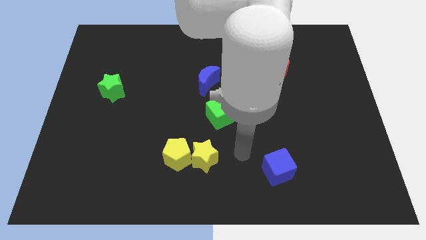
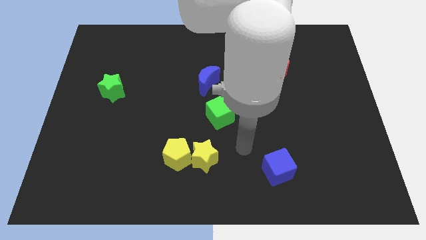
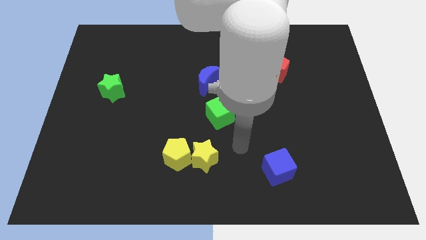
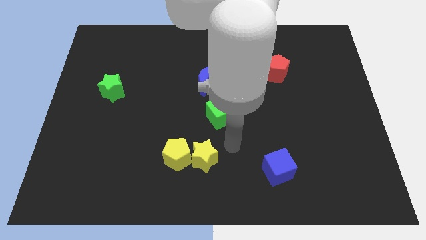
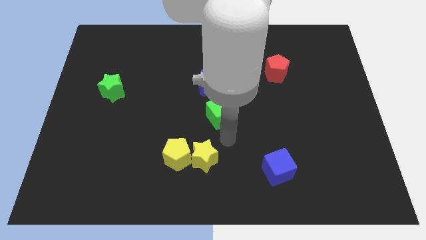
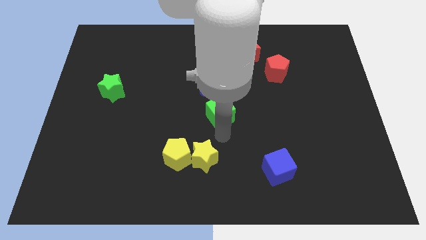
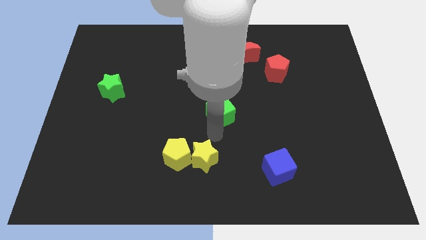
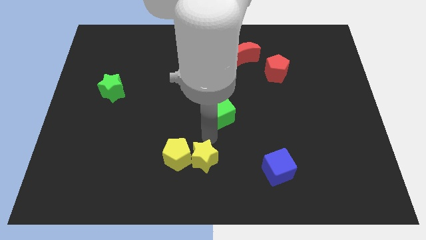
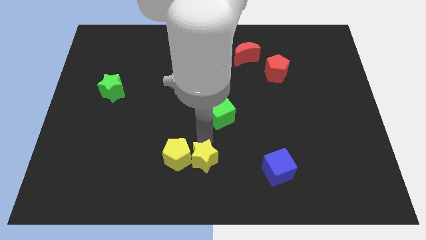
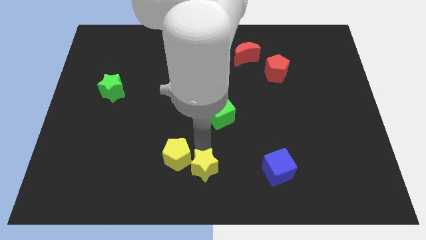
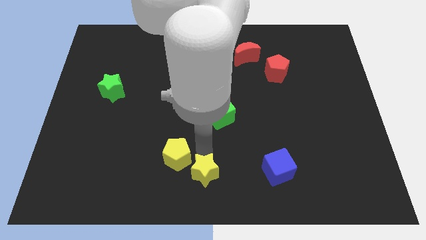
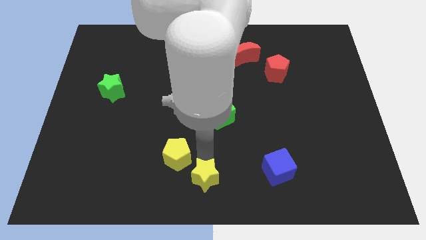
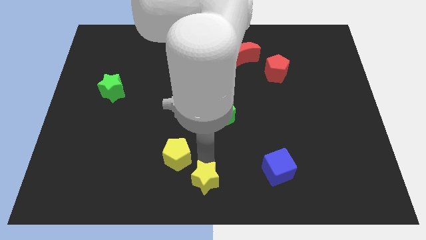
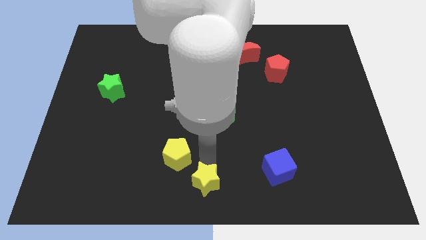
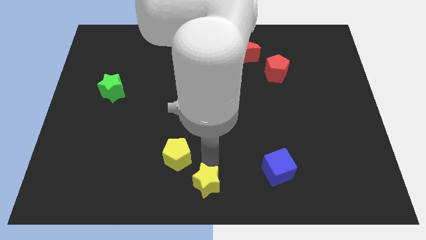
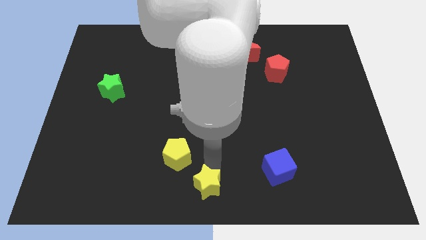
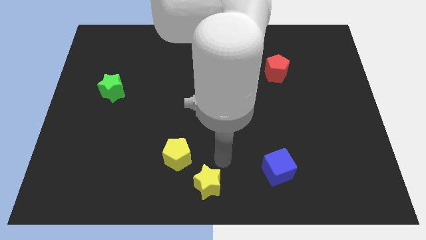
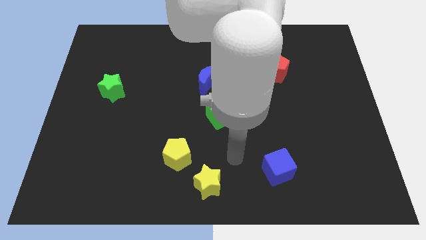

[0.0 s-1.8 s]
push the yellow star slightly to bottom

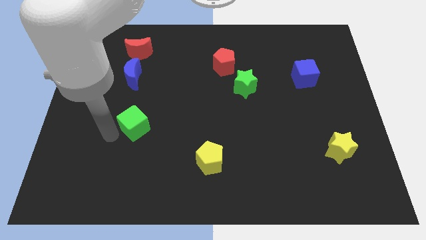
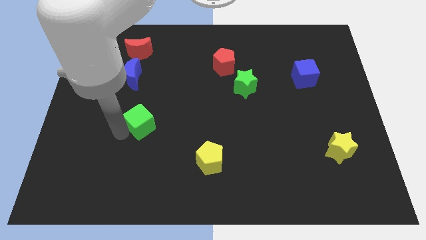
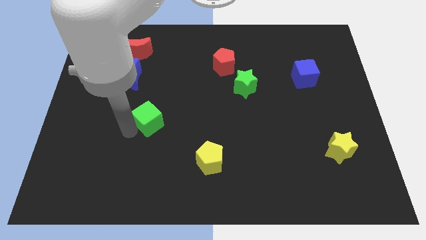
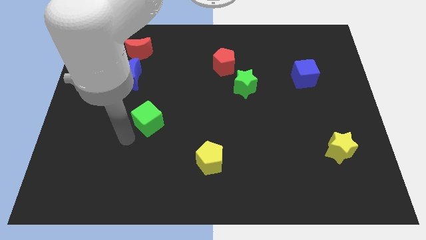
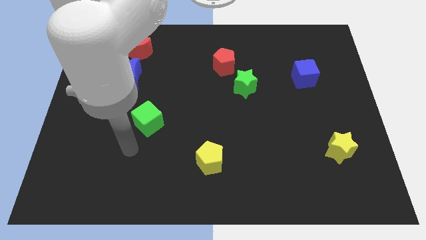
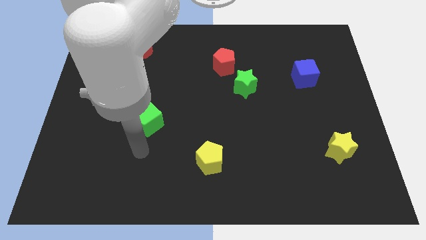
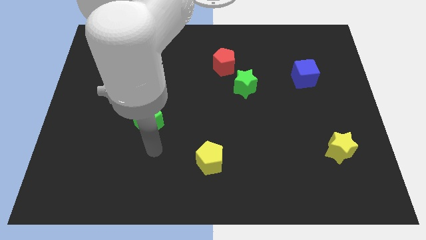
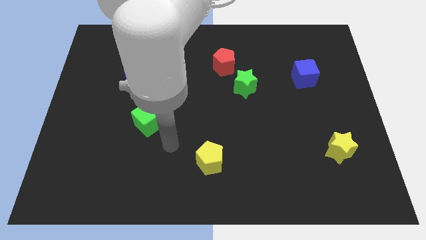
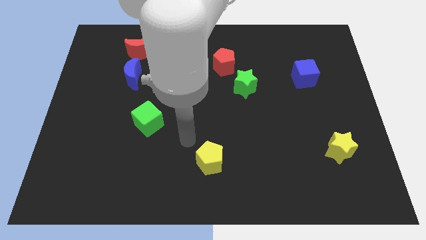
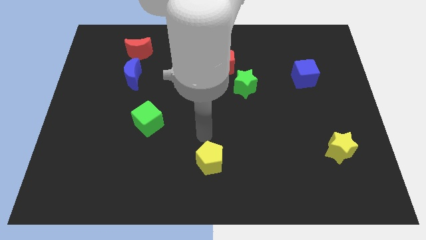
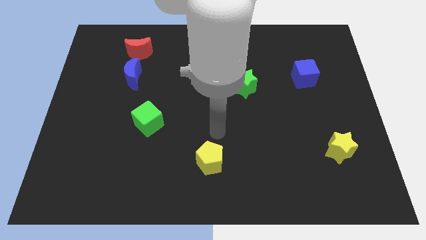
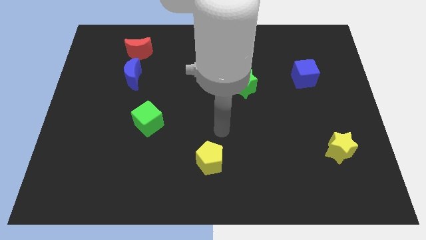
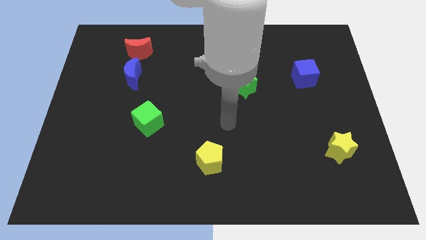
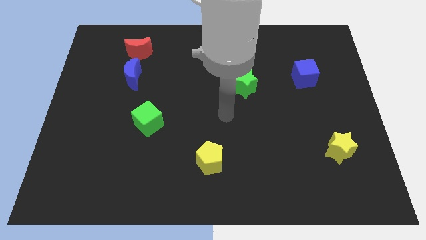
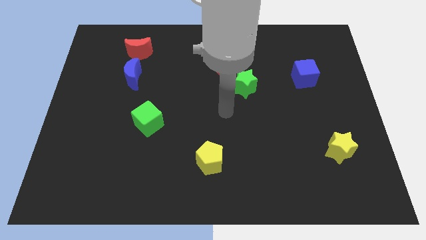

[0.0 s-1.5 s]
move the green cube slightly to the right

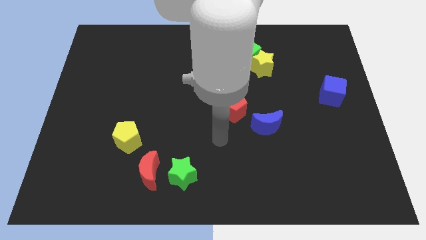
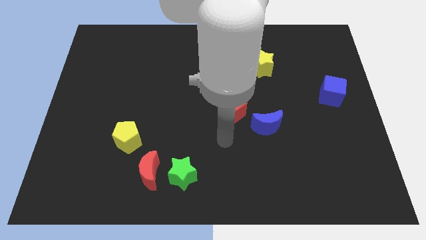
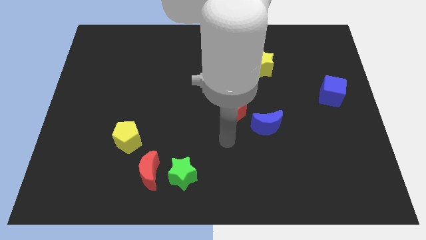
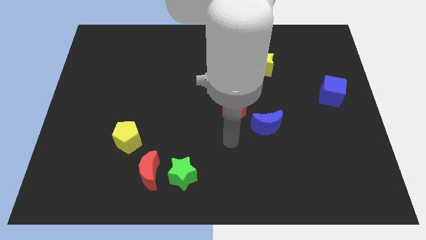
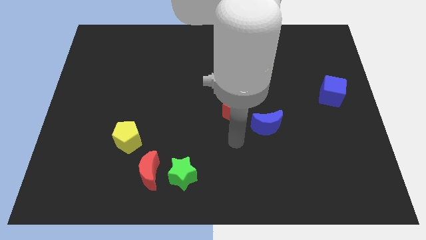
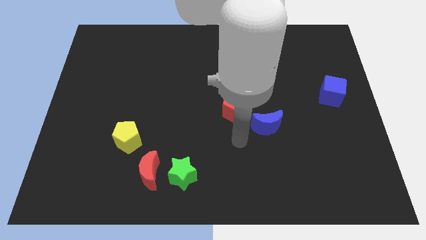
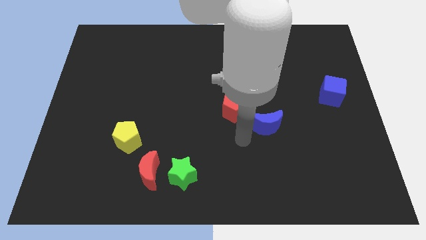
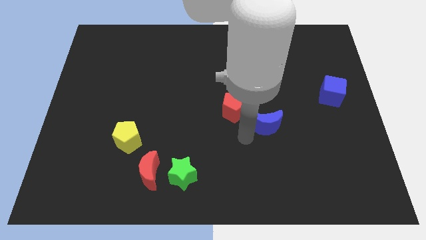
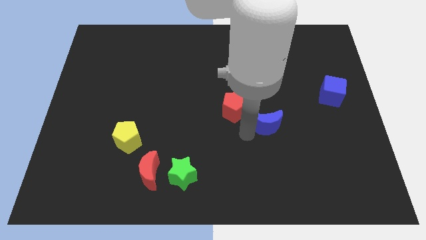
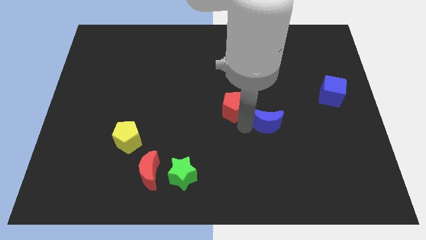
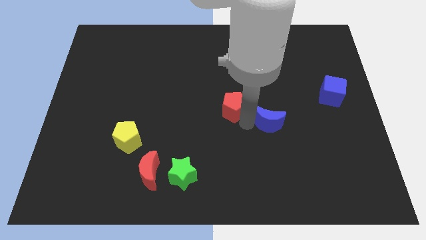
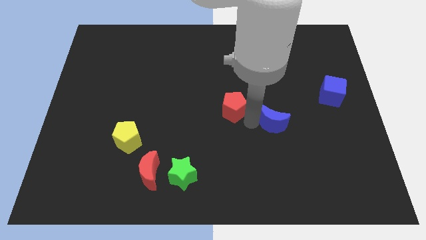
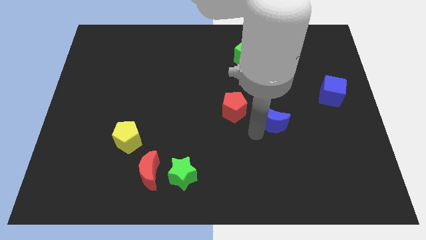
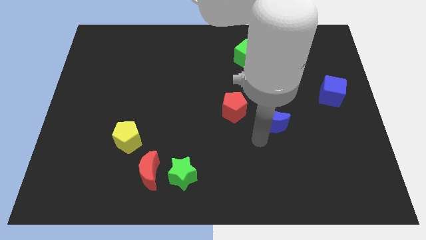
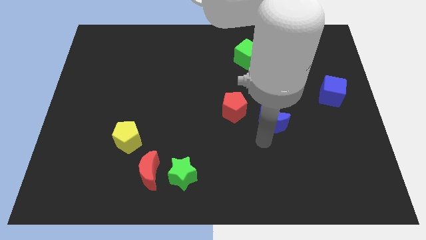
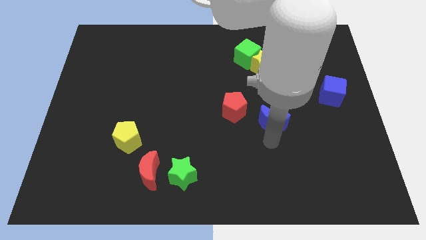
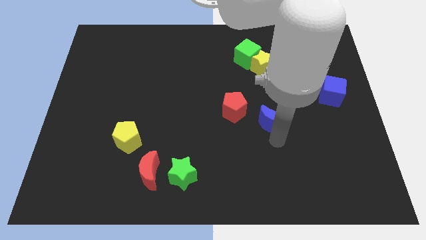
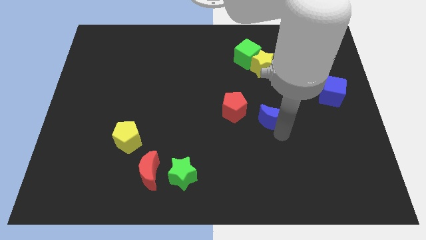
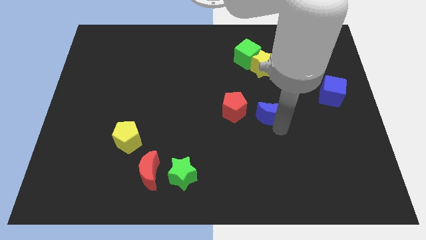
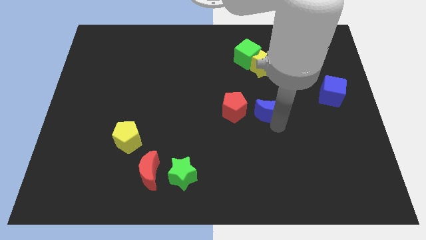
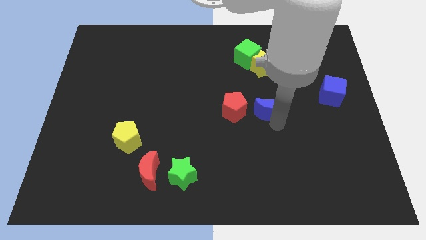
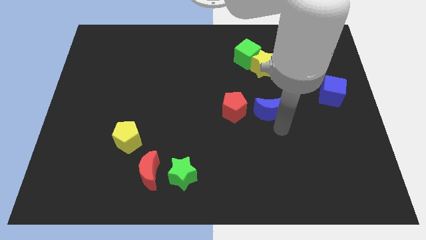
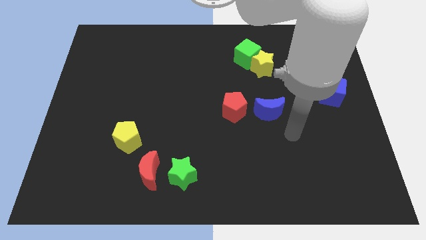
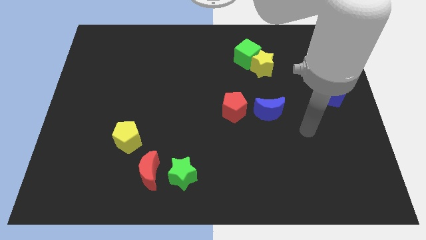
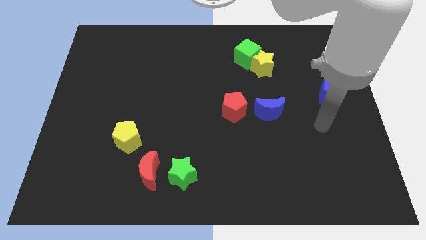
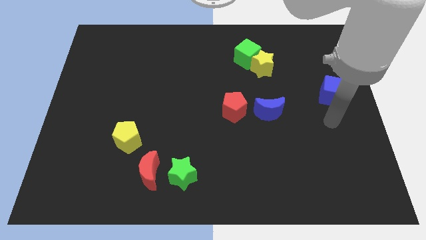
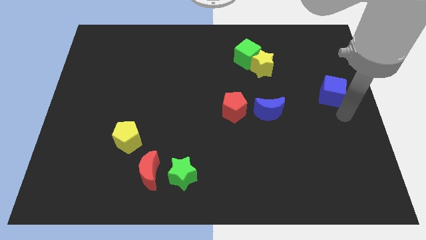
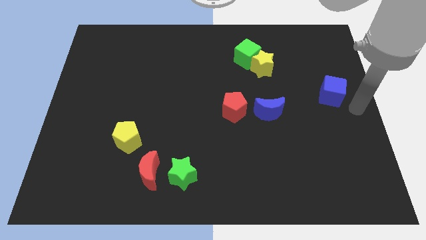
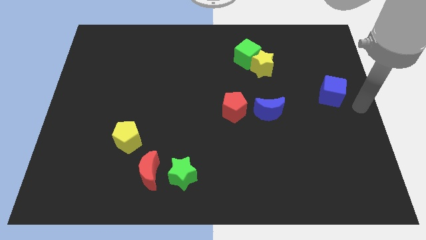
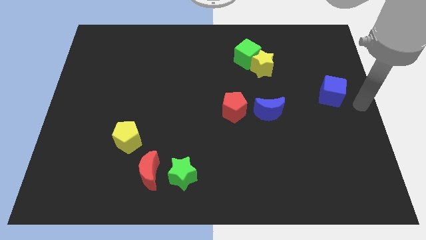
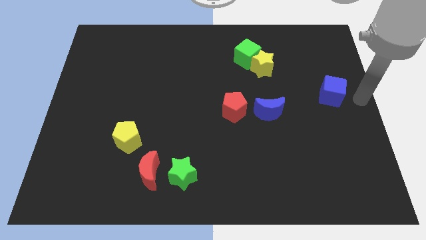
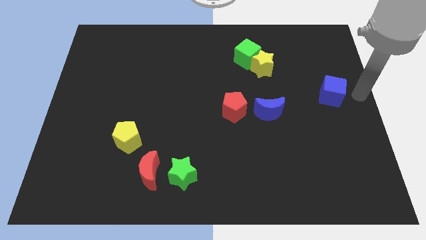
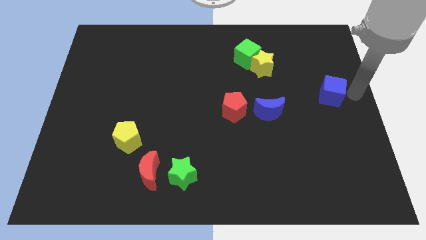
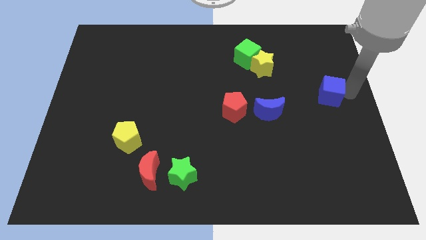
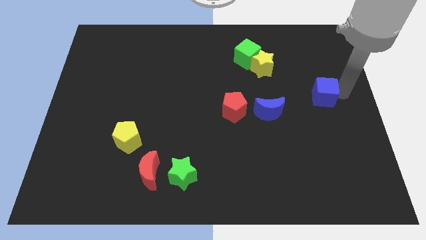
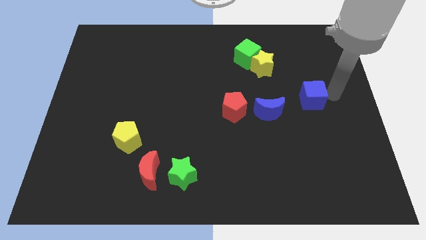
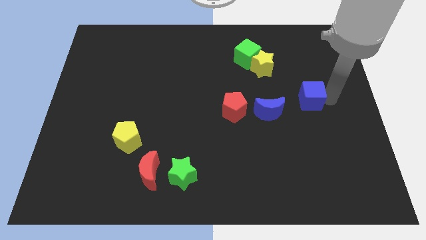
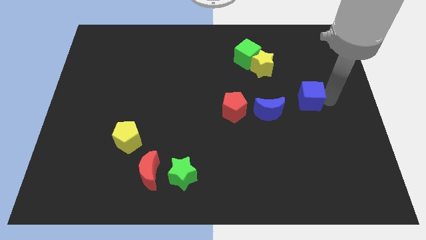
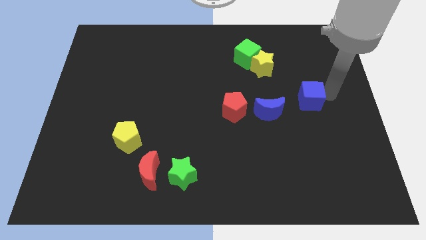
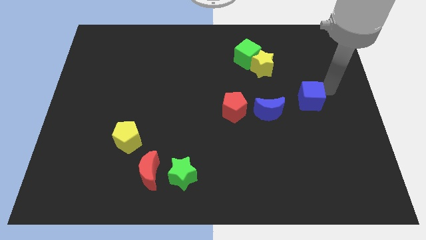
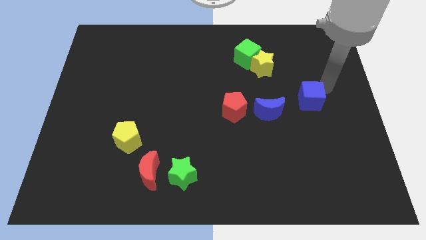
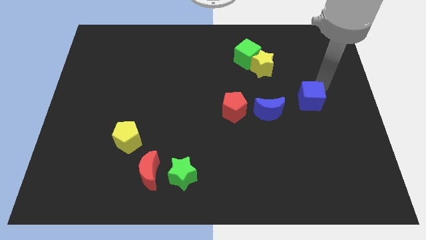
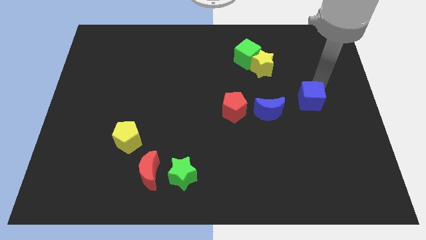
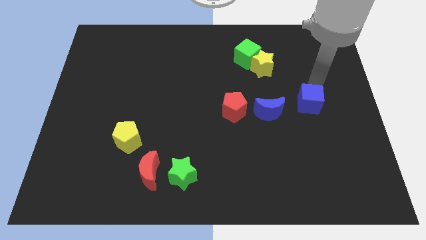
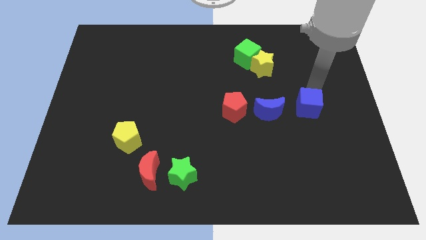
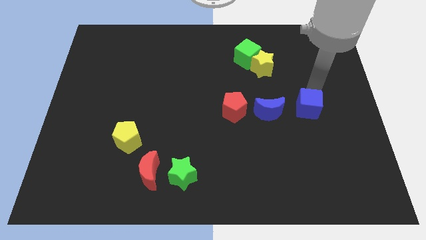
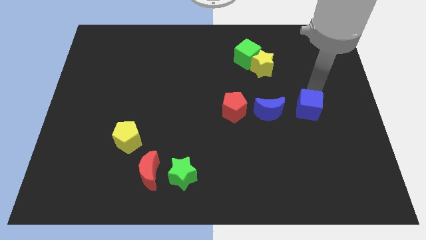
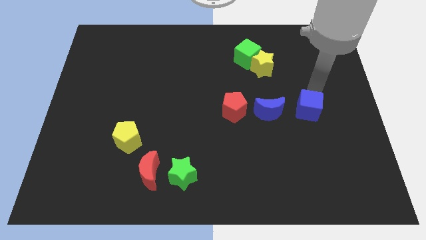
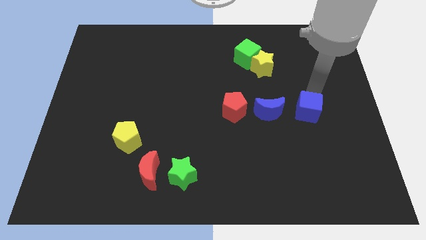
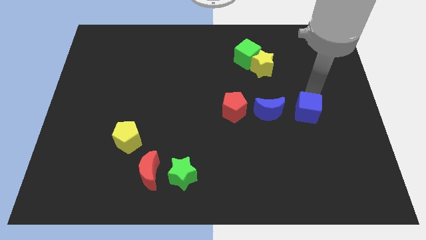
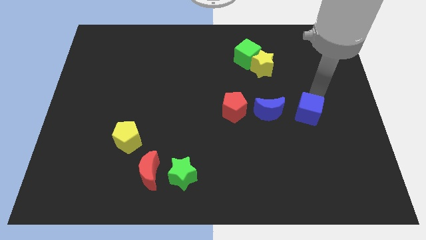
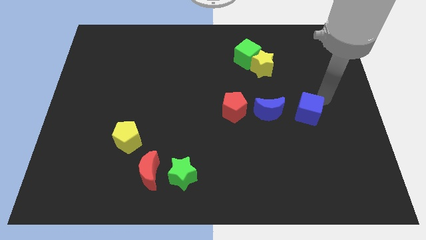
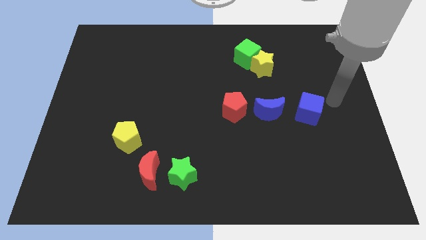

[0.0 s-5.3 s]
place the blue crescent and blue cube in a horizontal line at the right side of the red pentagon

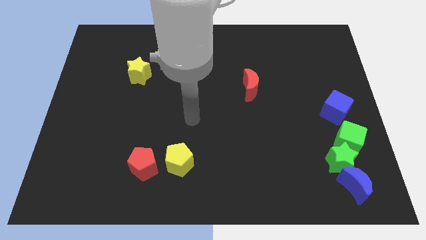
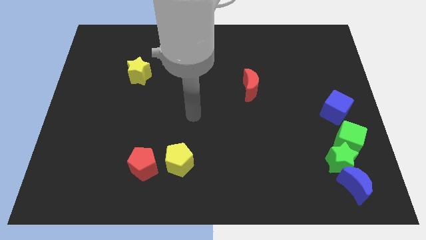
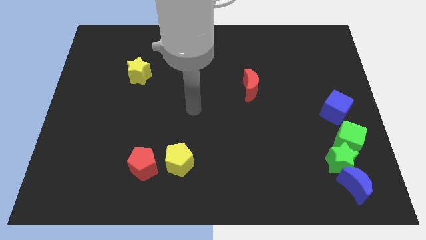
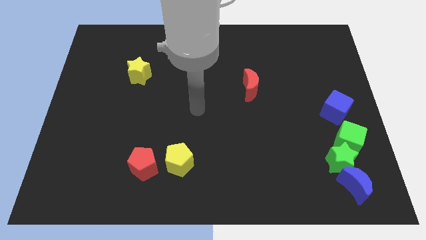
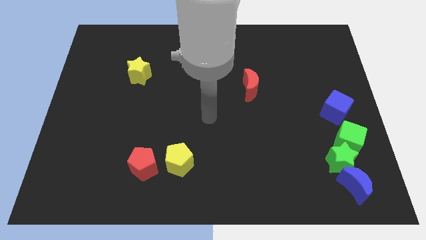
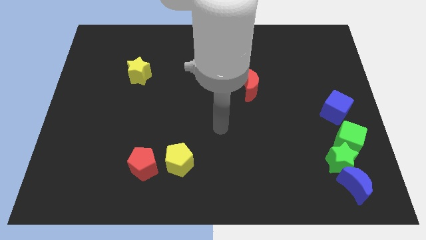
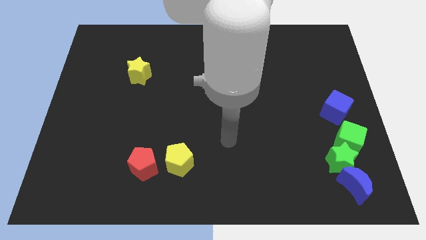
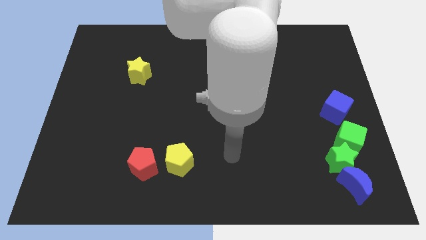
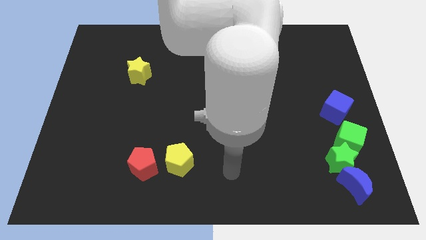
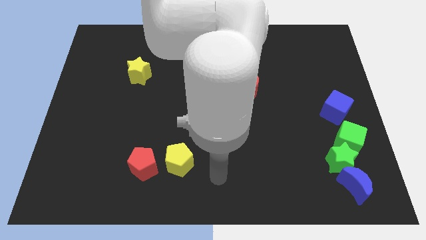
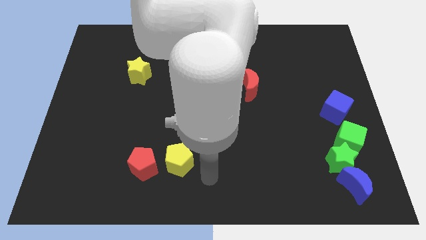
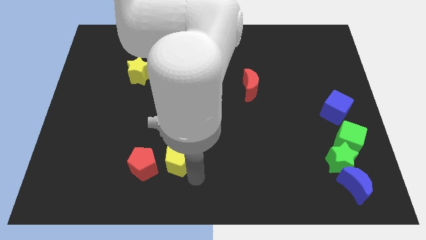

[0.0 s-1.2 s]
move your arm from center to bottom center
